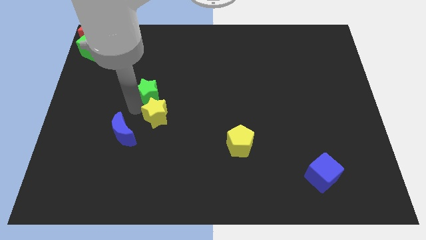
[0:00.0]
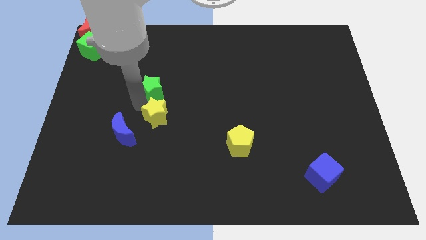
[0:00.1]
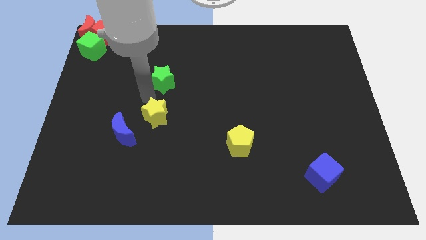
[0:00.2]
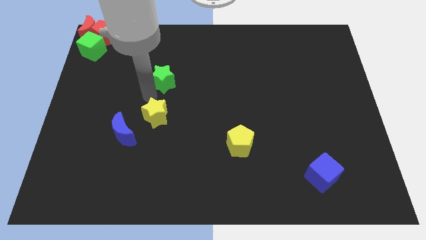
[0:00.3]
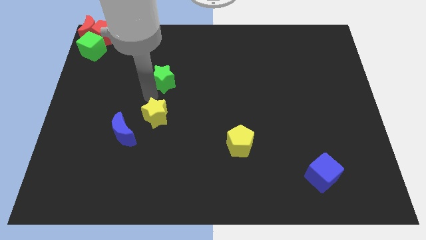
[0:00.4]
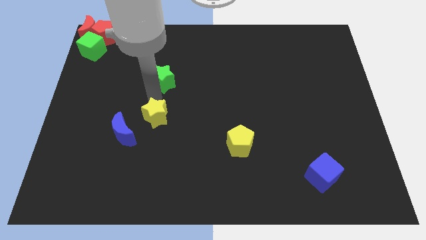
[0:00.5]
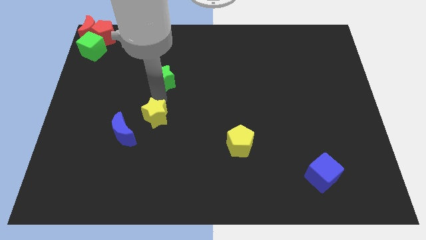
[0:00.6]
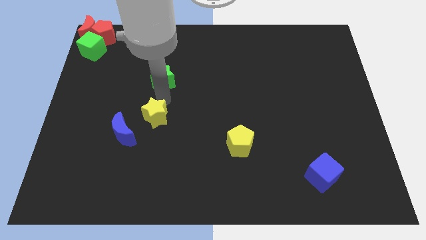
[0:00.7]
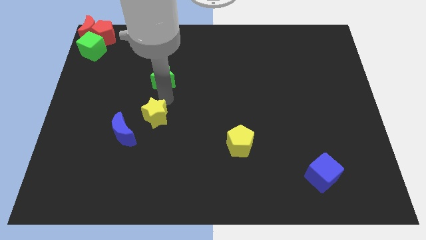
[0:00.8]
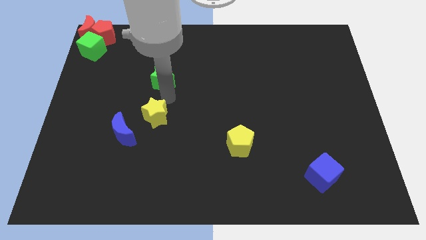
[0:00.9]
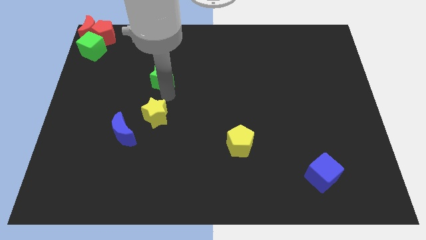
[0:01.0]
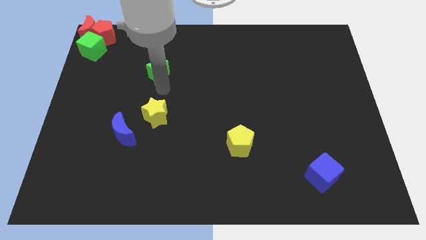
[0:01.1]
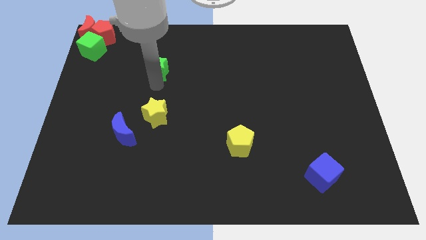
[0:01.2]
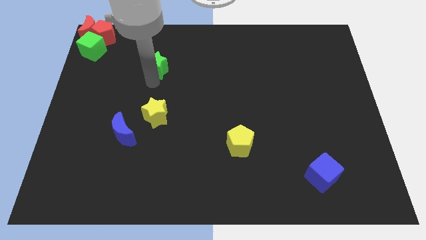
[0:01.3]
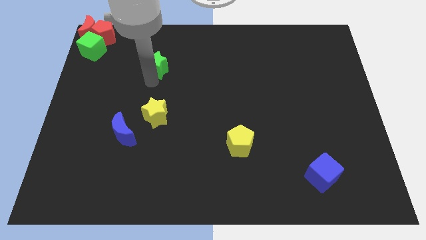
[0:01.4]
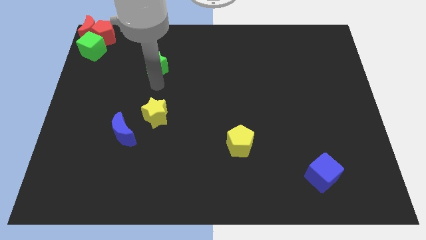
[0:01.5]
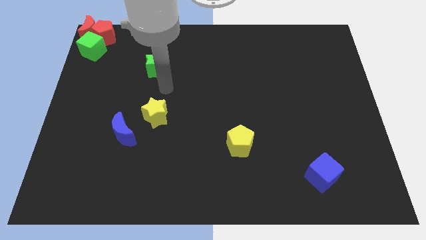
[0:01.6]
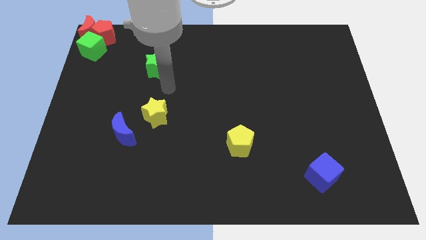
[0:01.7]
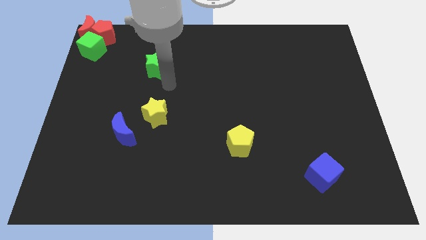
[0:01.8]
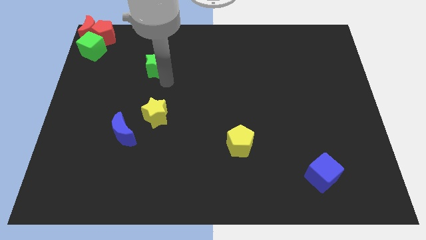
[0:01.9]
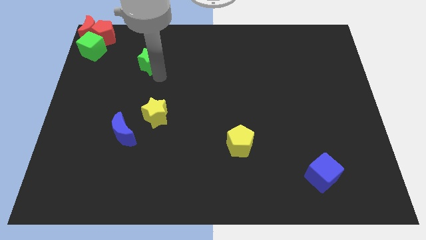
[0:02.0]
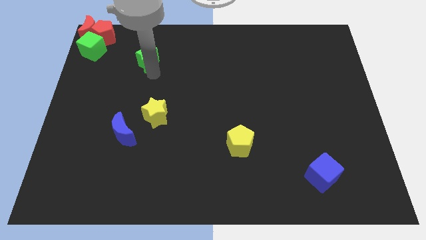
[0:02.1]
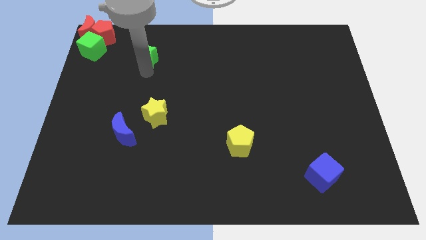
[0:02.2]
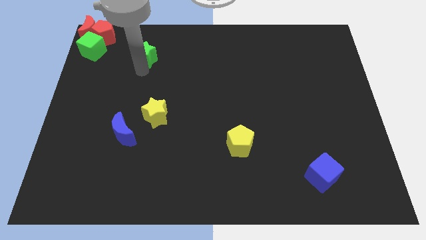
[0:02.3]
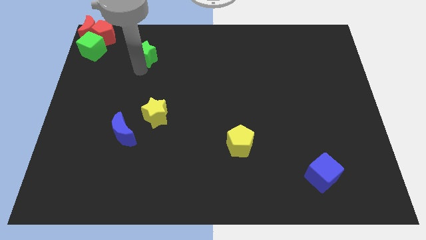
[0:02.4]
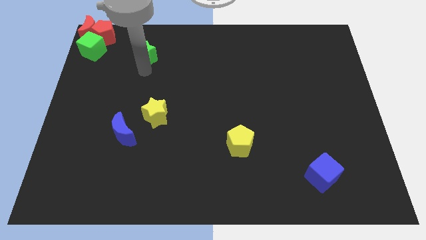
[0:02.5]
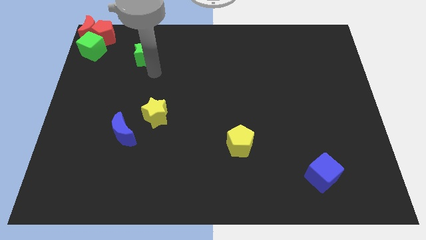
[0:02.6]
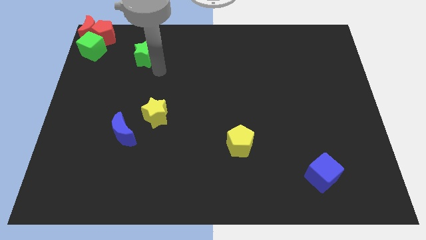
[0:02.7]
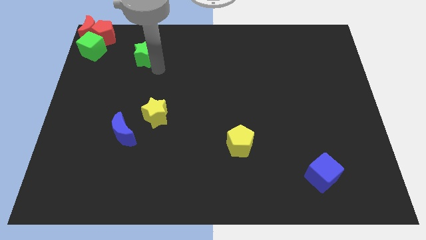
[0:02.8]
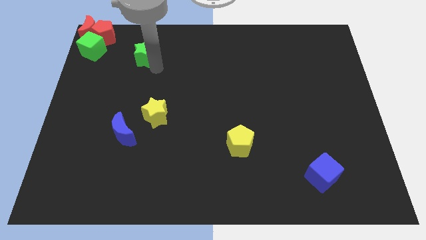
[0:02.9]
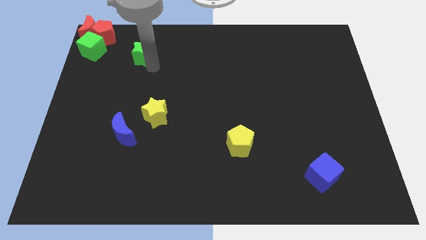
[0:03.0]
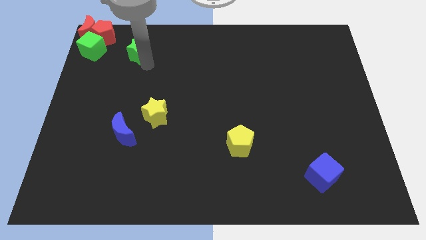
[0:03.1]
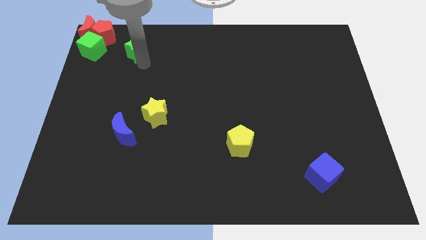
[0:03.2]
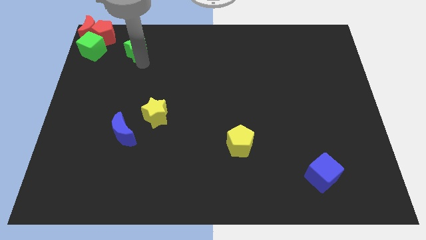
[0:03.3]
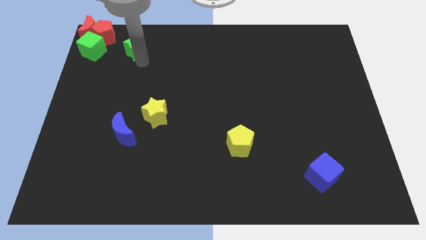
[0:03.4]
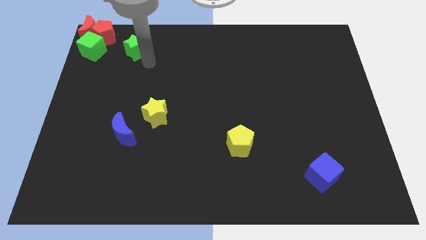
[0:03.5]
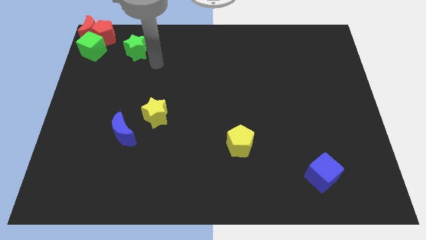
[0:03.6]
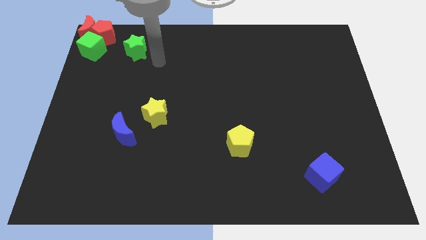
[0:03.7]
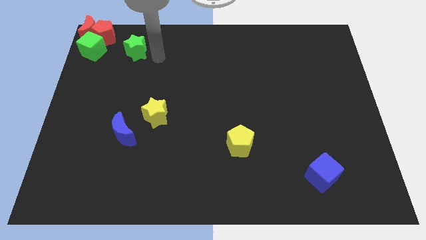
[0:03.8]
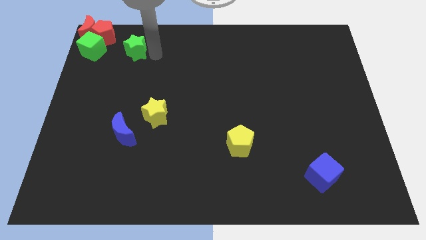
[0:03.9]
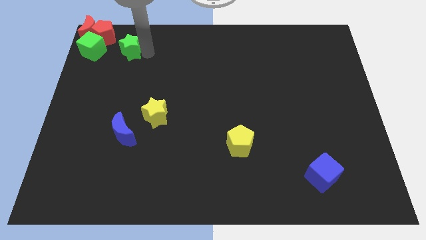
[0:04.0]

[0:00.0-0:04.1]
put the green star parallel right to the green cube

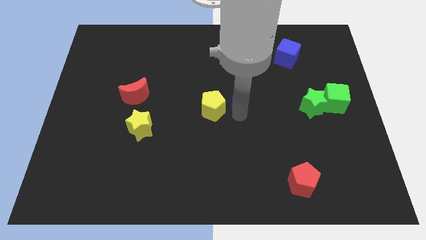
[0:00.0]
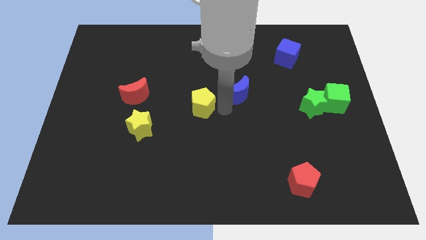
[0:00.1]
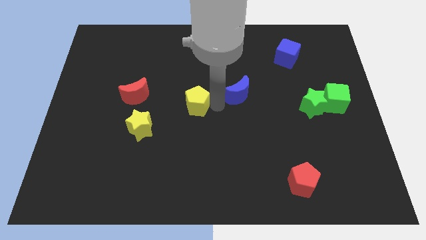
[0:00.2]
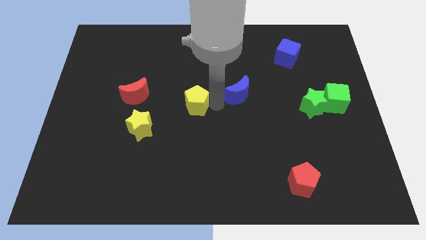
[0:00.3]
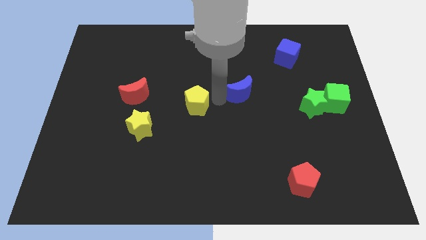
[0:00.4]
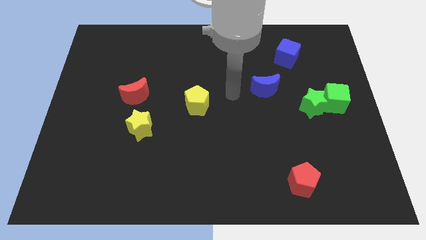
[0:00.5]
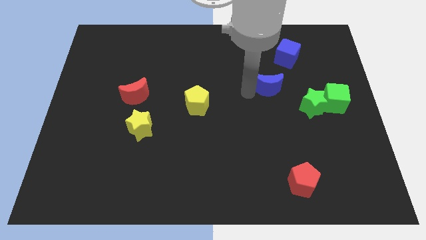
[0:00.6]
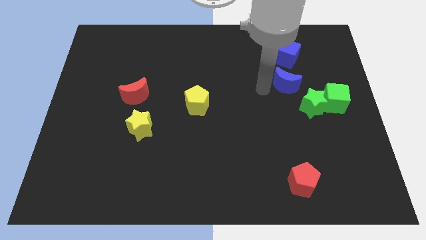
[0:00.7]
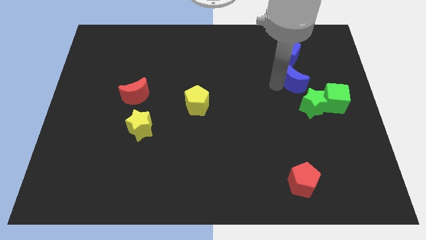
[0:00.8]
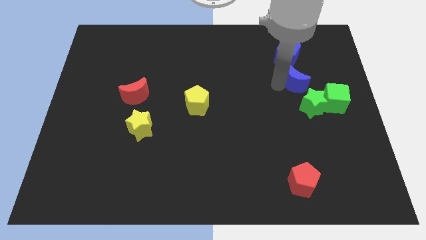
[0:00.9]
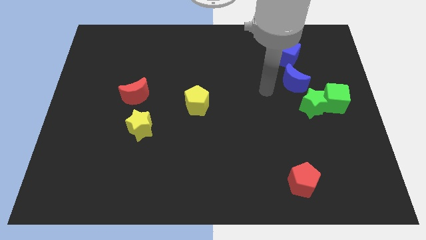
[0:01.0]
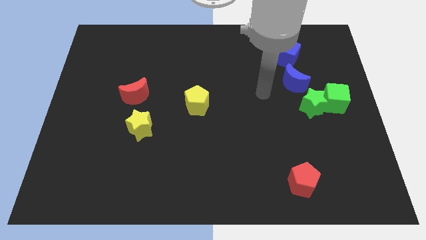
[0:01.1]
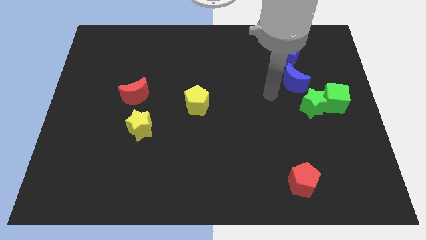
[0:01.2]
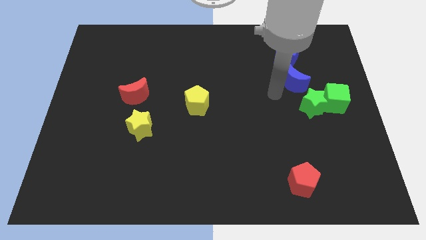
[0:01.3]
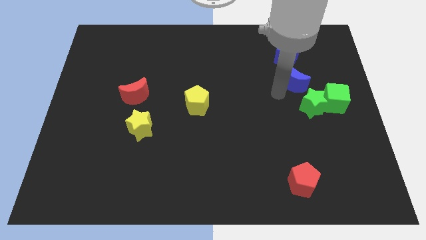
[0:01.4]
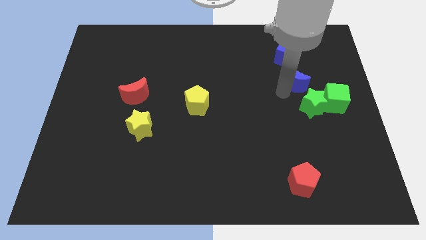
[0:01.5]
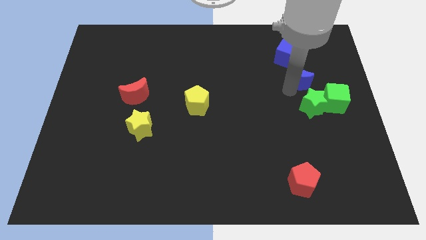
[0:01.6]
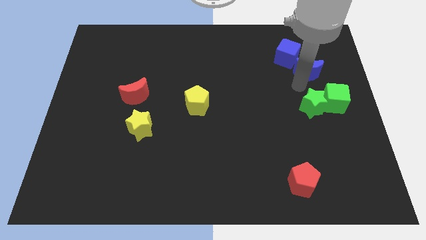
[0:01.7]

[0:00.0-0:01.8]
place the blue crescent in between the green star and blue cube

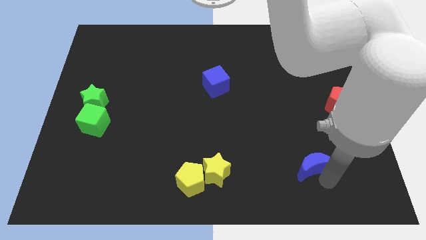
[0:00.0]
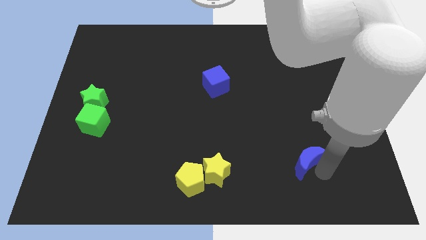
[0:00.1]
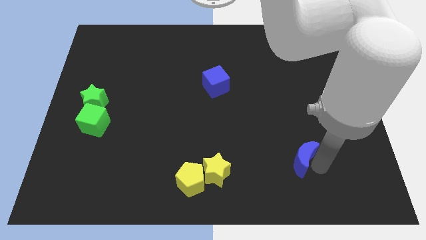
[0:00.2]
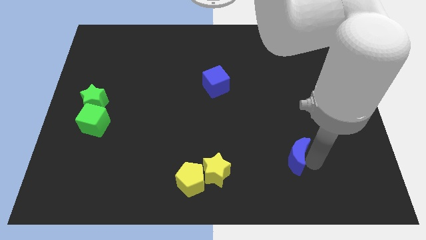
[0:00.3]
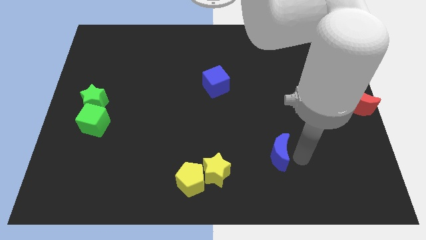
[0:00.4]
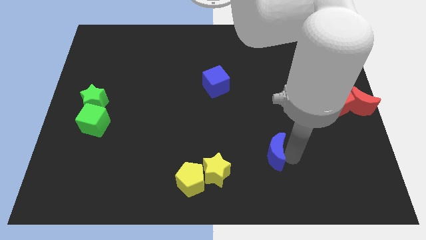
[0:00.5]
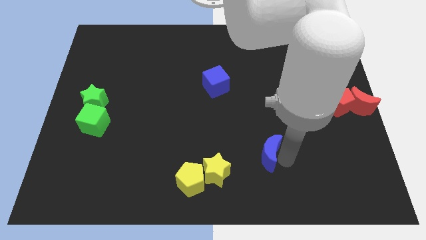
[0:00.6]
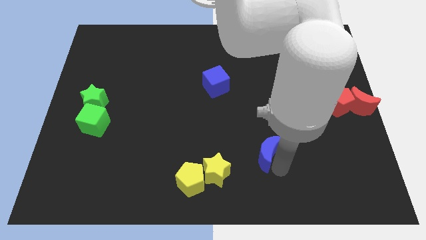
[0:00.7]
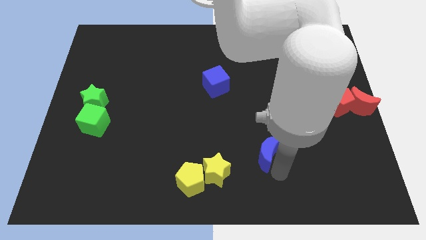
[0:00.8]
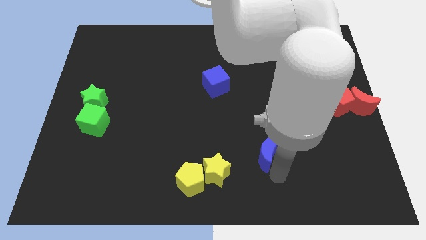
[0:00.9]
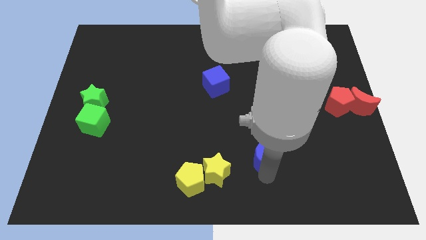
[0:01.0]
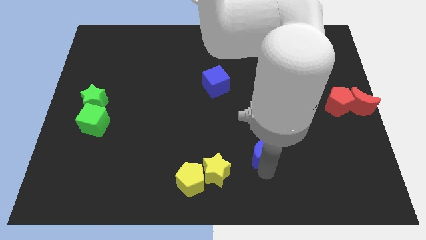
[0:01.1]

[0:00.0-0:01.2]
move the blue crescent close to the yellow star

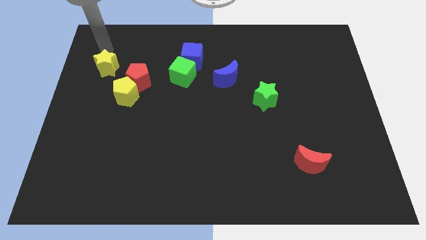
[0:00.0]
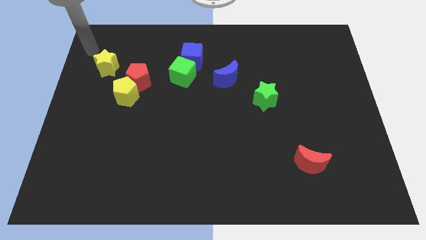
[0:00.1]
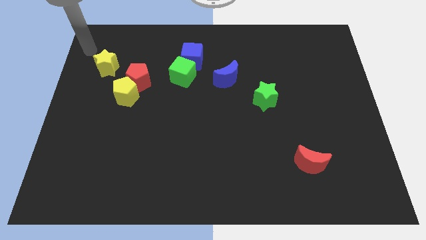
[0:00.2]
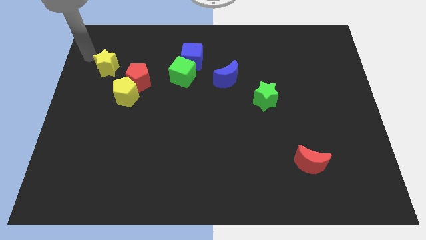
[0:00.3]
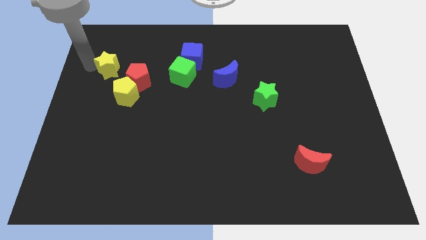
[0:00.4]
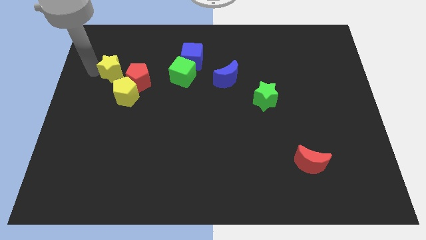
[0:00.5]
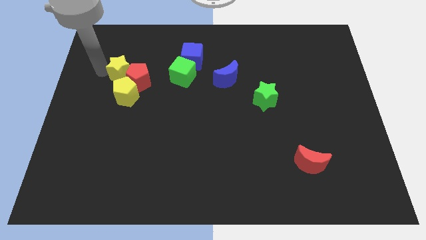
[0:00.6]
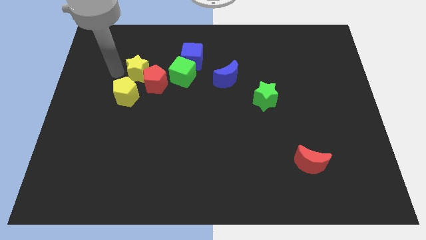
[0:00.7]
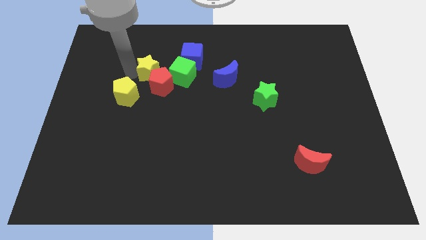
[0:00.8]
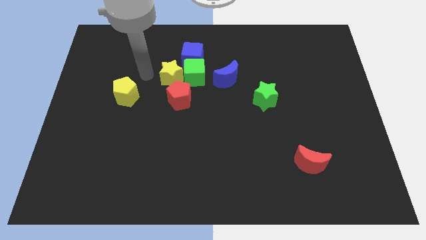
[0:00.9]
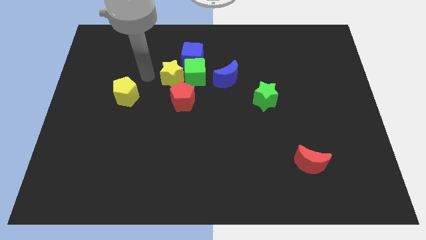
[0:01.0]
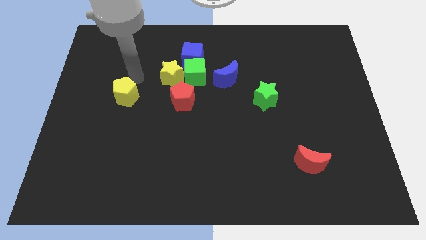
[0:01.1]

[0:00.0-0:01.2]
move the yellow star into the green cube

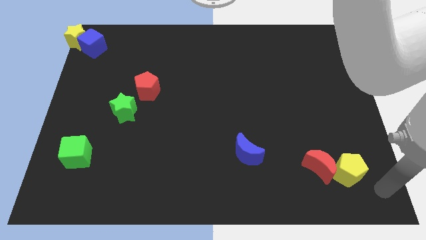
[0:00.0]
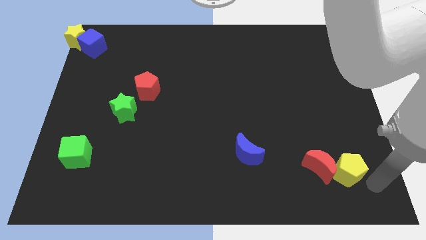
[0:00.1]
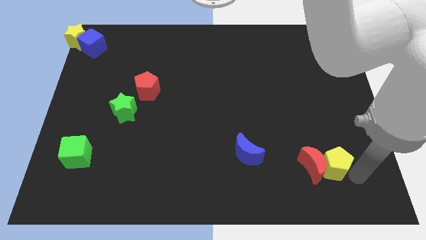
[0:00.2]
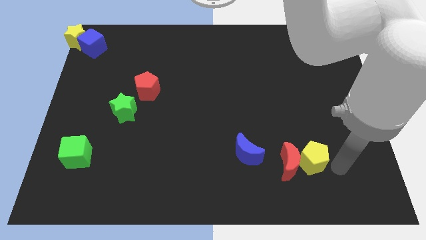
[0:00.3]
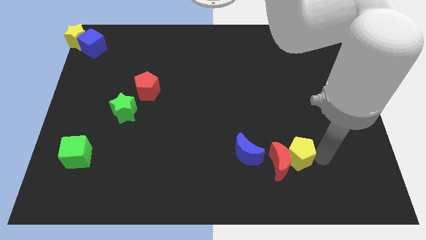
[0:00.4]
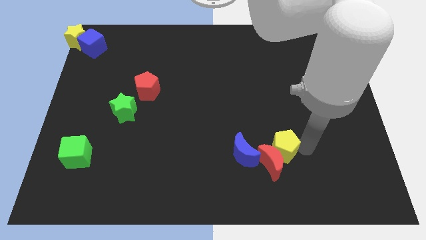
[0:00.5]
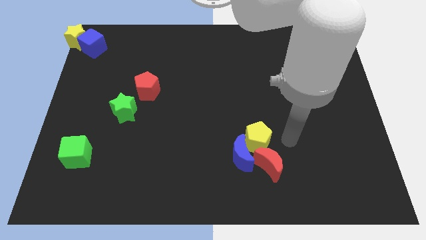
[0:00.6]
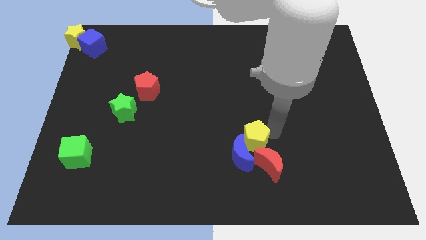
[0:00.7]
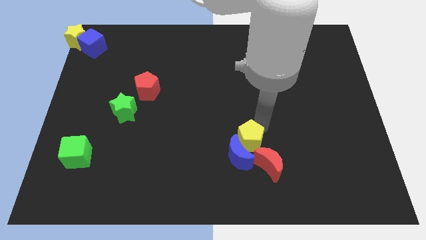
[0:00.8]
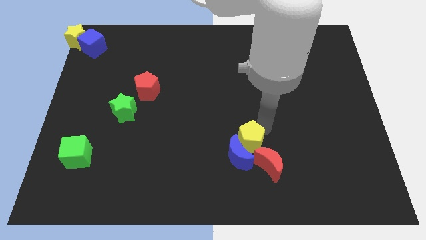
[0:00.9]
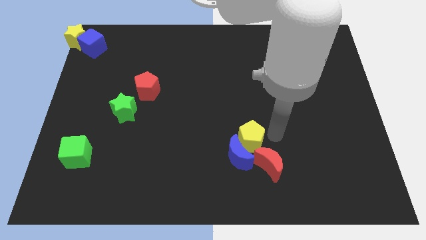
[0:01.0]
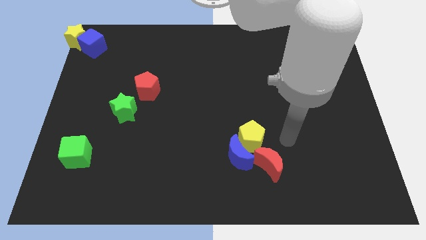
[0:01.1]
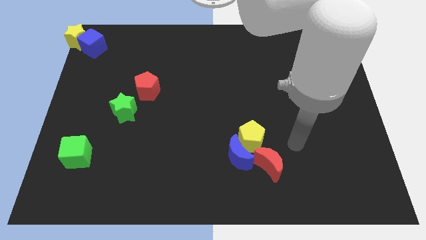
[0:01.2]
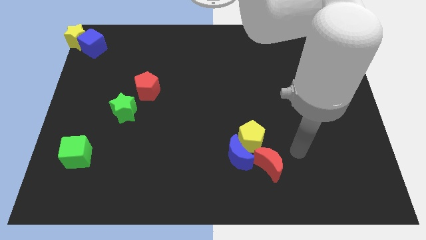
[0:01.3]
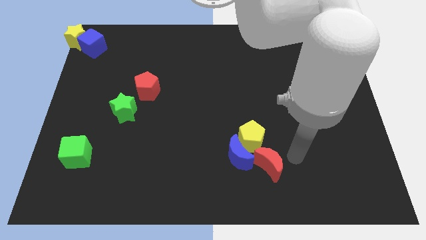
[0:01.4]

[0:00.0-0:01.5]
push yellow pentagon into the blue crescent
